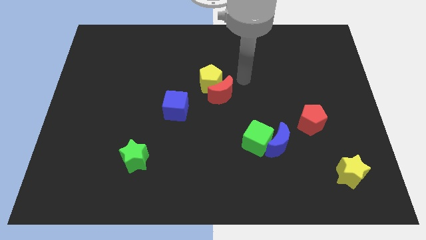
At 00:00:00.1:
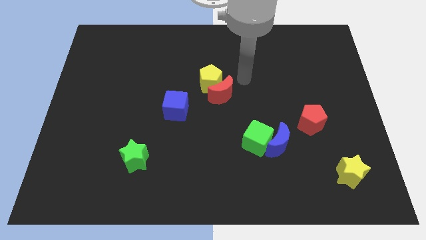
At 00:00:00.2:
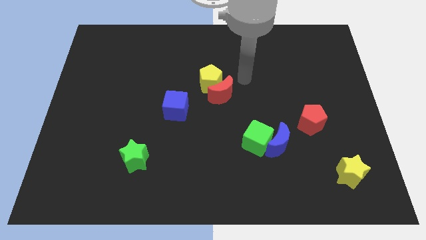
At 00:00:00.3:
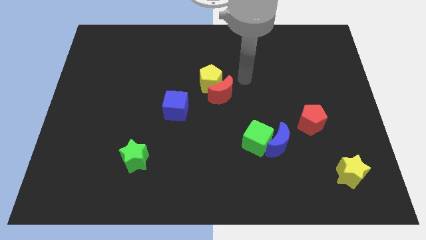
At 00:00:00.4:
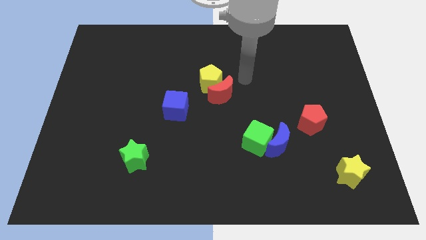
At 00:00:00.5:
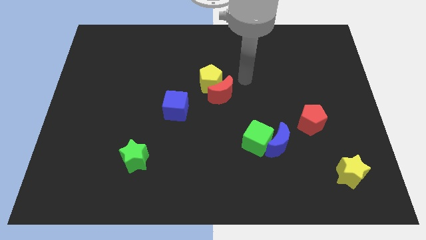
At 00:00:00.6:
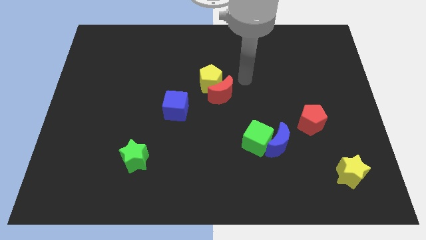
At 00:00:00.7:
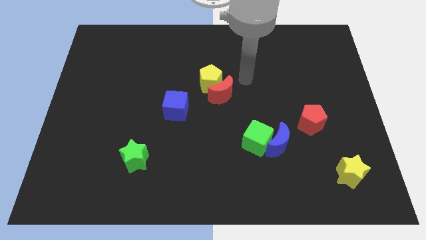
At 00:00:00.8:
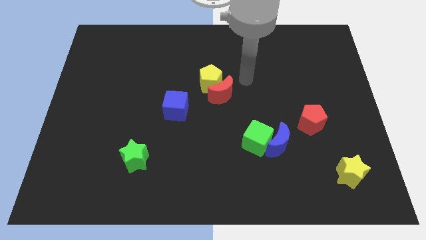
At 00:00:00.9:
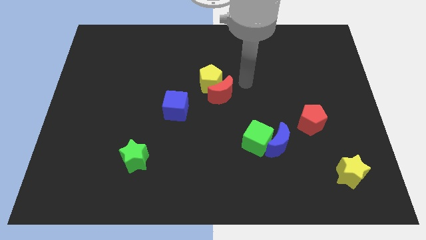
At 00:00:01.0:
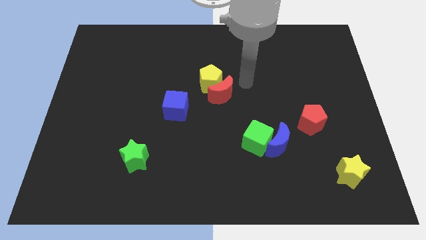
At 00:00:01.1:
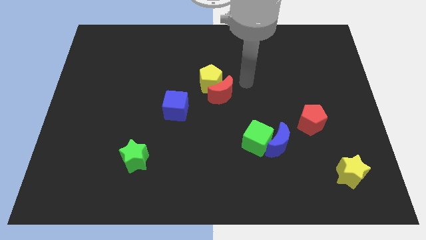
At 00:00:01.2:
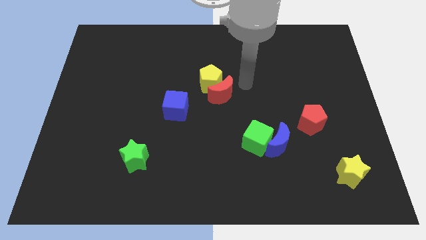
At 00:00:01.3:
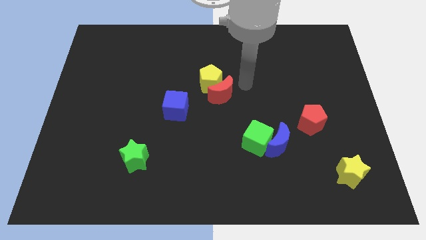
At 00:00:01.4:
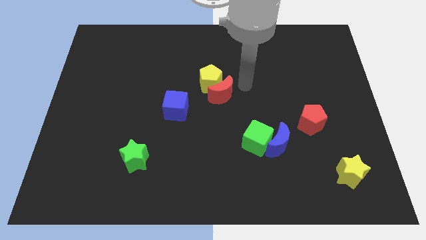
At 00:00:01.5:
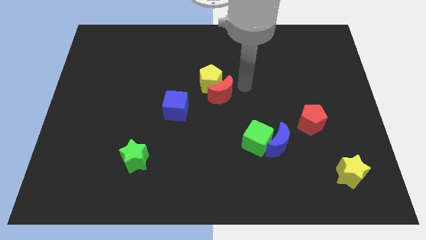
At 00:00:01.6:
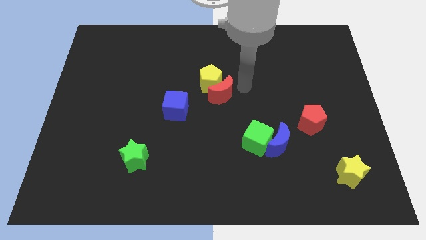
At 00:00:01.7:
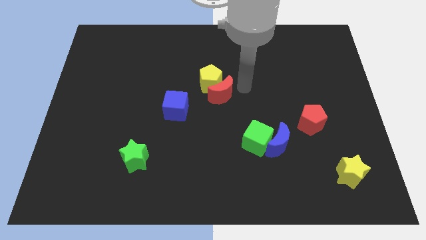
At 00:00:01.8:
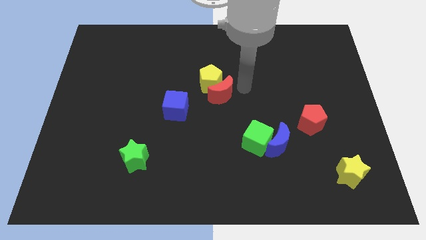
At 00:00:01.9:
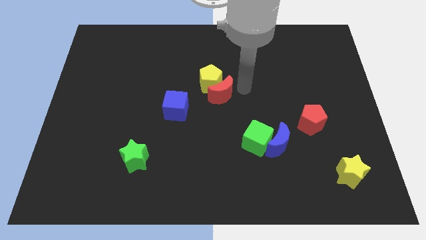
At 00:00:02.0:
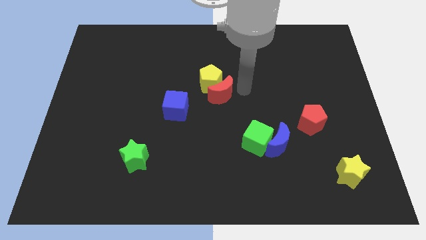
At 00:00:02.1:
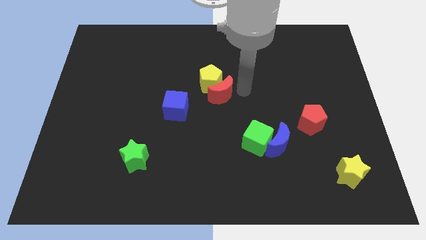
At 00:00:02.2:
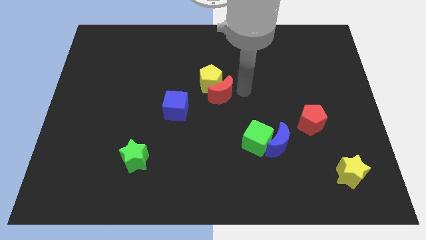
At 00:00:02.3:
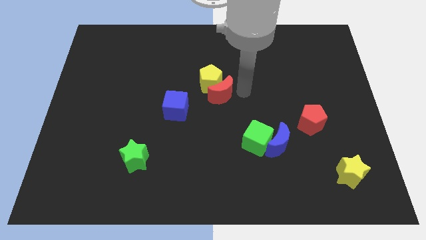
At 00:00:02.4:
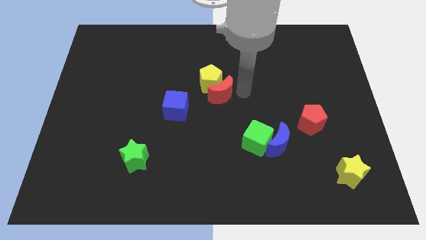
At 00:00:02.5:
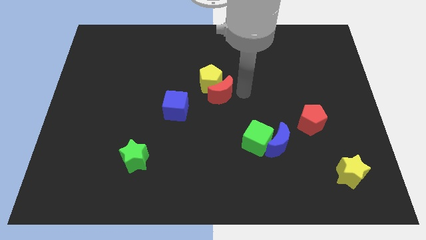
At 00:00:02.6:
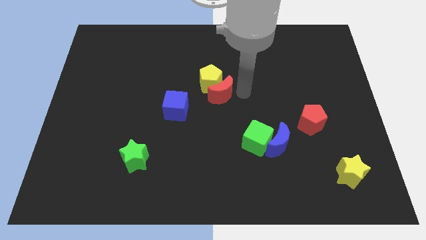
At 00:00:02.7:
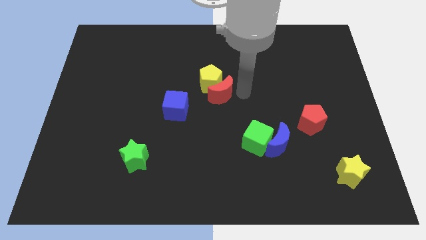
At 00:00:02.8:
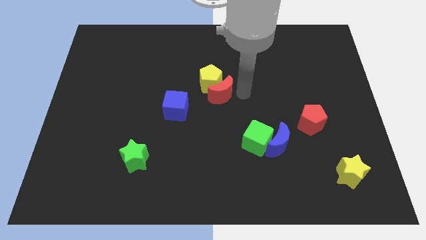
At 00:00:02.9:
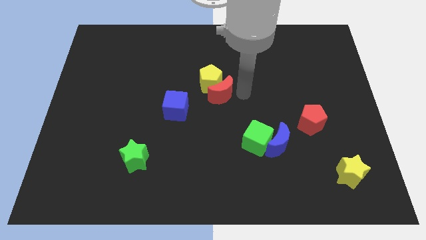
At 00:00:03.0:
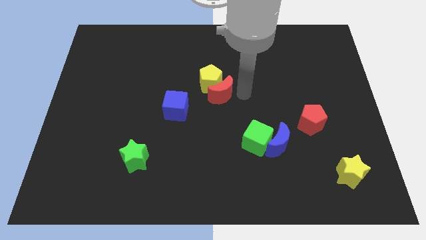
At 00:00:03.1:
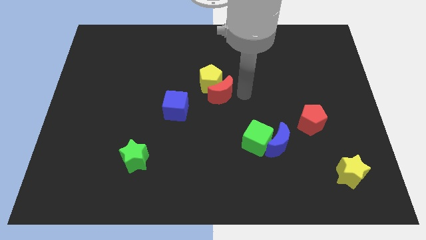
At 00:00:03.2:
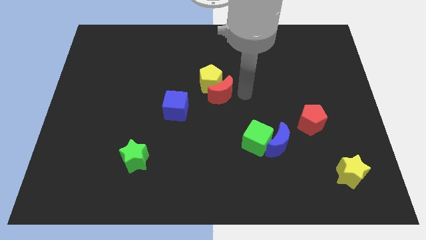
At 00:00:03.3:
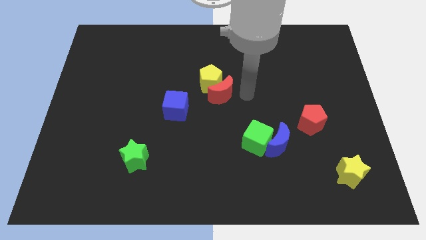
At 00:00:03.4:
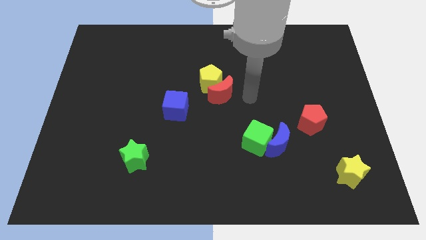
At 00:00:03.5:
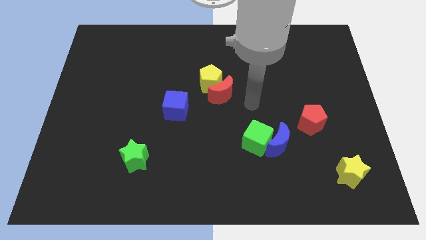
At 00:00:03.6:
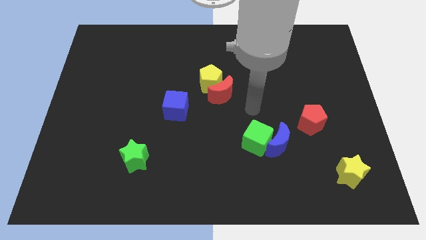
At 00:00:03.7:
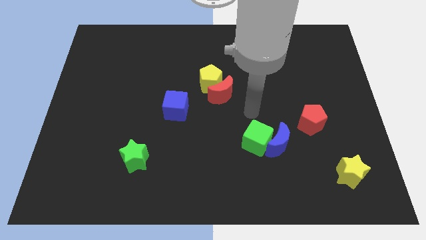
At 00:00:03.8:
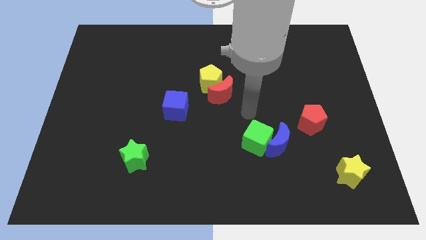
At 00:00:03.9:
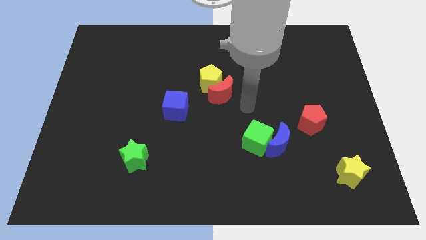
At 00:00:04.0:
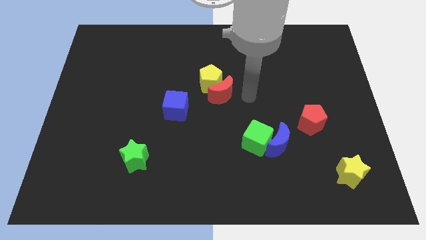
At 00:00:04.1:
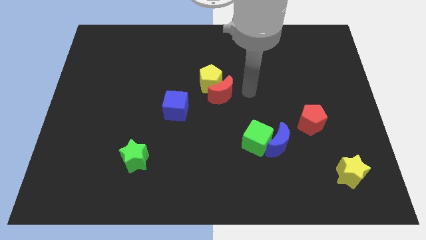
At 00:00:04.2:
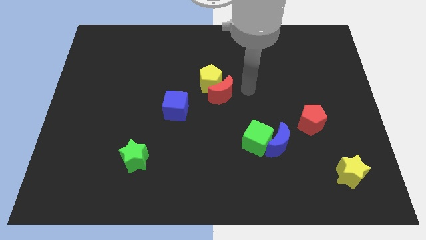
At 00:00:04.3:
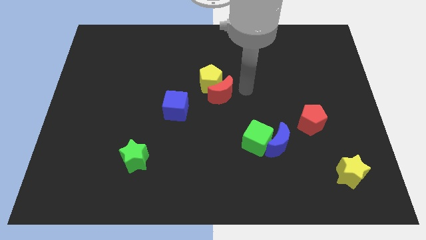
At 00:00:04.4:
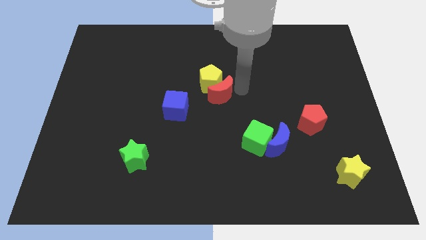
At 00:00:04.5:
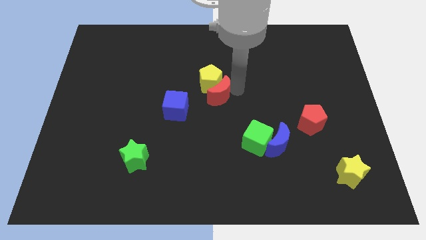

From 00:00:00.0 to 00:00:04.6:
touch the red moon

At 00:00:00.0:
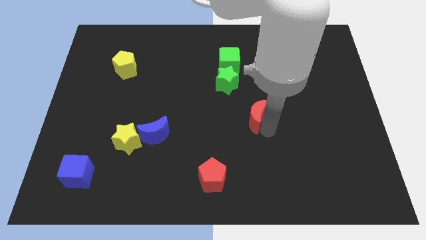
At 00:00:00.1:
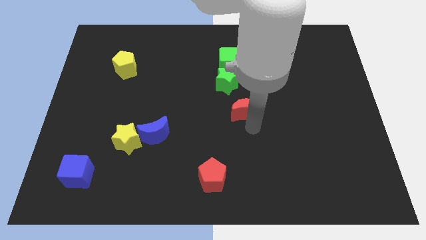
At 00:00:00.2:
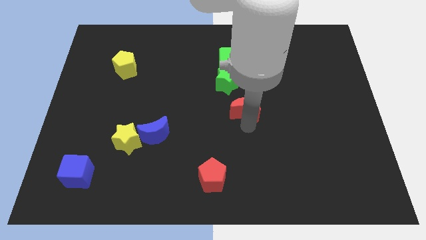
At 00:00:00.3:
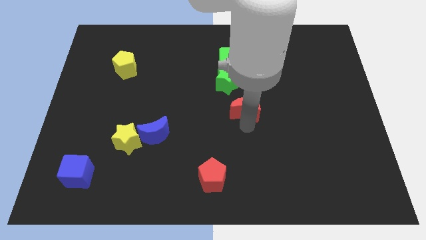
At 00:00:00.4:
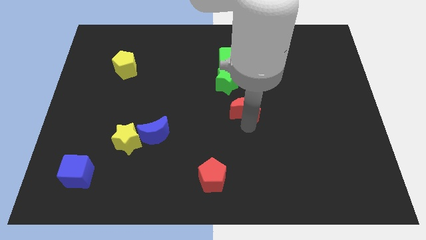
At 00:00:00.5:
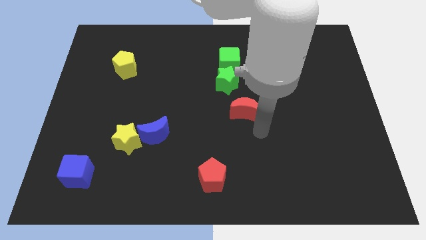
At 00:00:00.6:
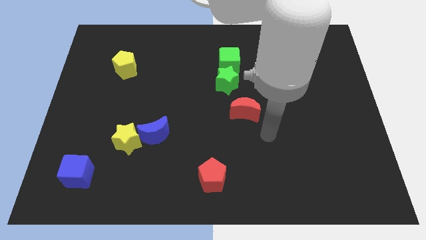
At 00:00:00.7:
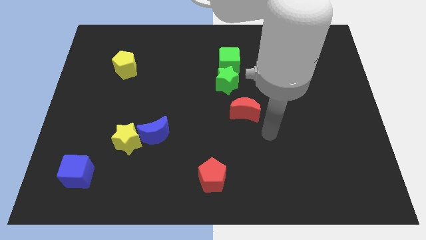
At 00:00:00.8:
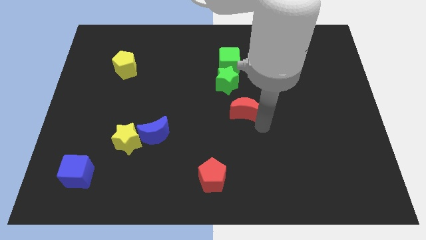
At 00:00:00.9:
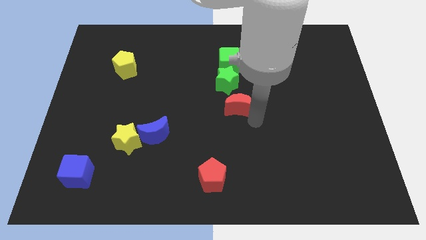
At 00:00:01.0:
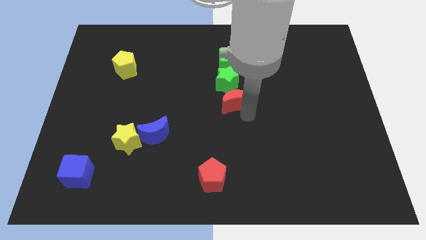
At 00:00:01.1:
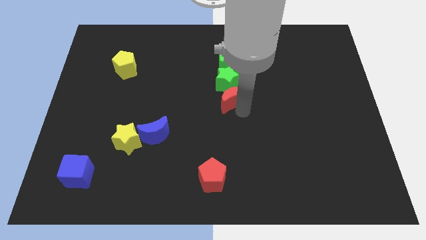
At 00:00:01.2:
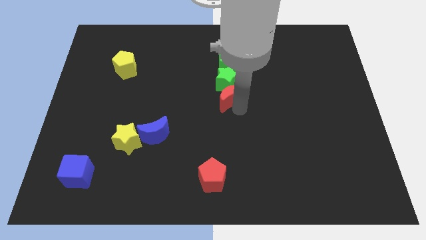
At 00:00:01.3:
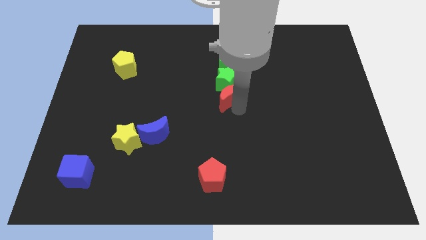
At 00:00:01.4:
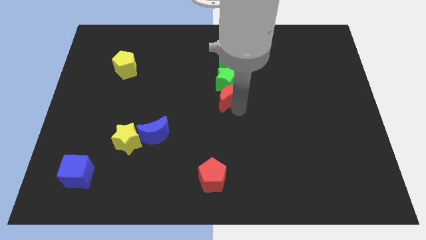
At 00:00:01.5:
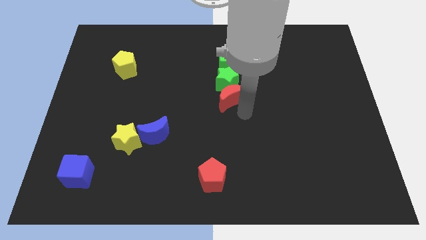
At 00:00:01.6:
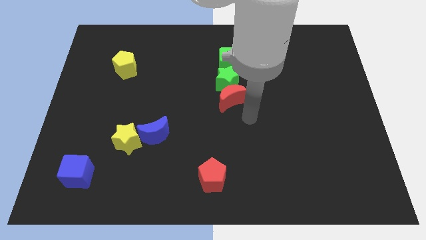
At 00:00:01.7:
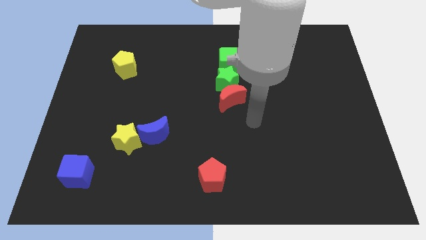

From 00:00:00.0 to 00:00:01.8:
drag the red moon to the bottom right side of the green star

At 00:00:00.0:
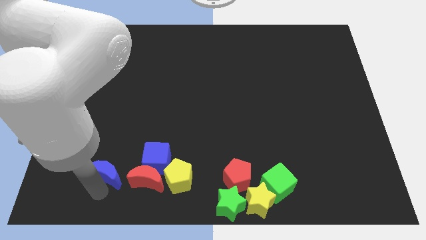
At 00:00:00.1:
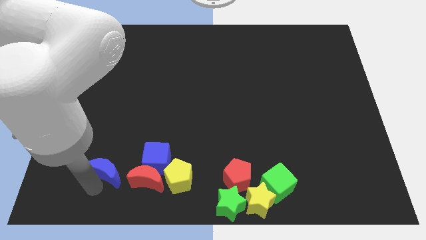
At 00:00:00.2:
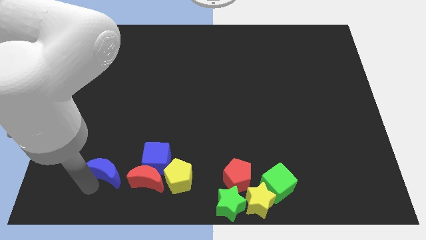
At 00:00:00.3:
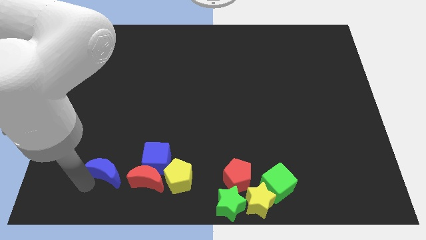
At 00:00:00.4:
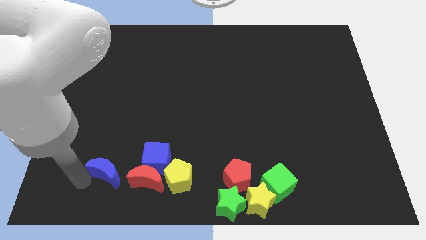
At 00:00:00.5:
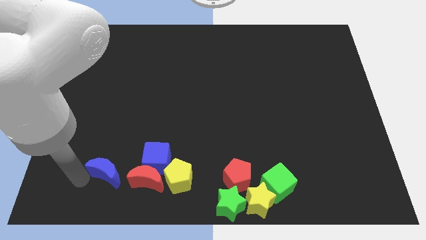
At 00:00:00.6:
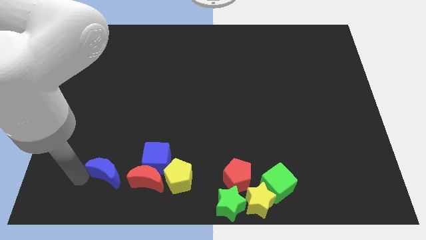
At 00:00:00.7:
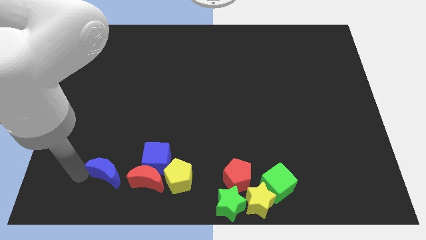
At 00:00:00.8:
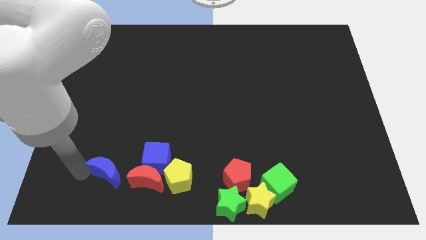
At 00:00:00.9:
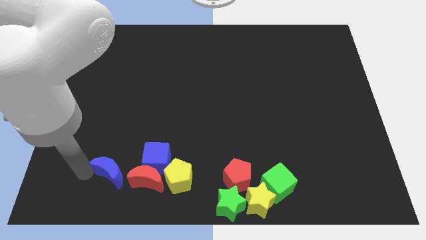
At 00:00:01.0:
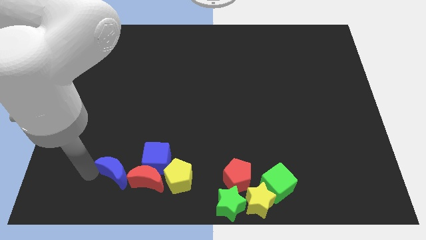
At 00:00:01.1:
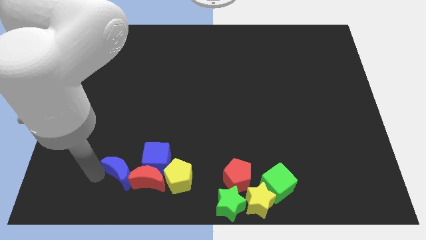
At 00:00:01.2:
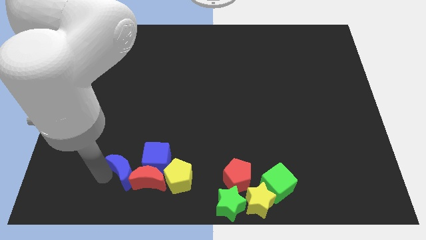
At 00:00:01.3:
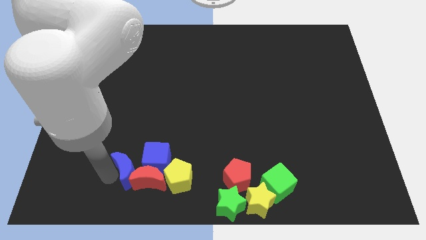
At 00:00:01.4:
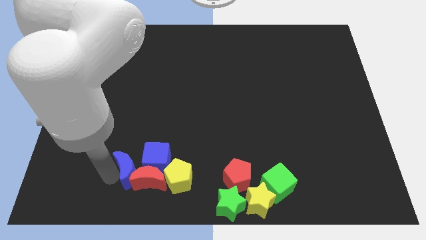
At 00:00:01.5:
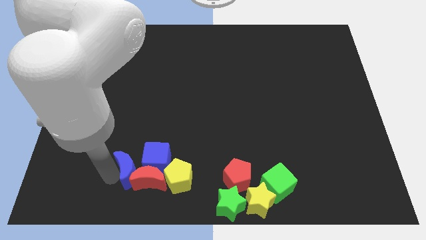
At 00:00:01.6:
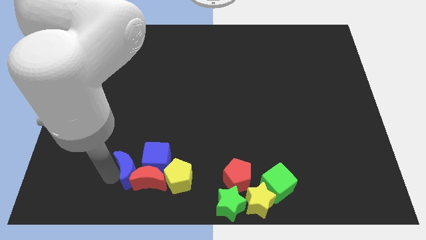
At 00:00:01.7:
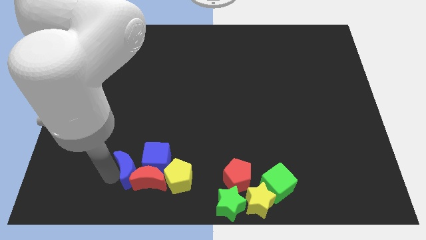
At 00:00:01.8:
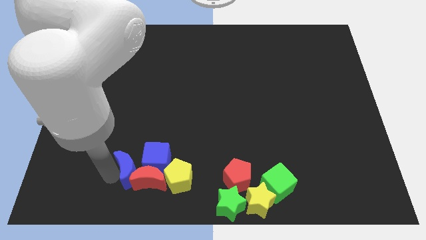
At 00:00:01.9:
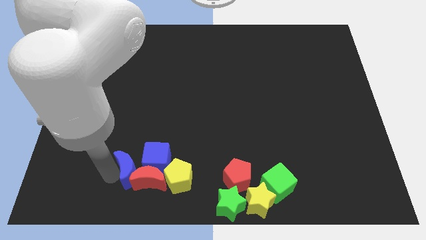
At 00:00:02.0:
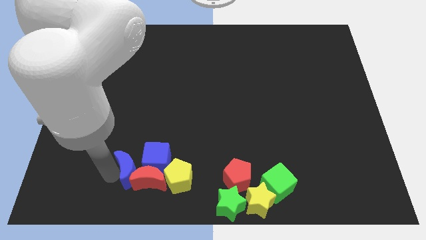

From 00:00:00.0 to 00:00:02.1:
push the blue moon into the red moon

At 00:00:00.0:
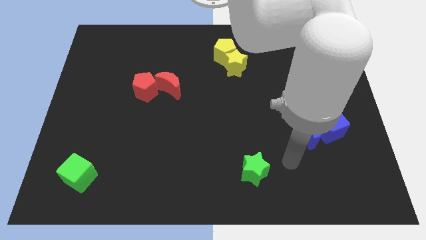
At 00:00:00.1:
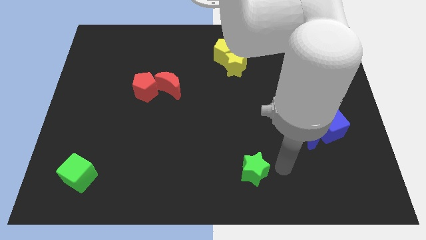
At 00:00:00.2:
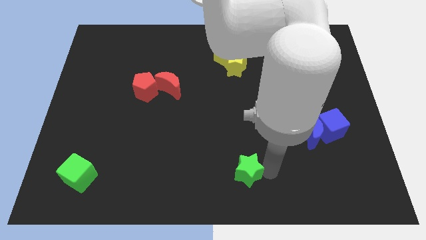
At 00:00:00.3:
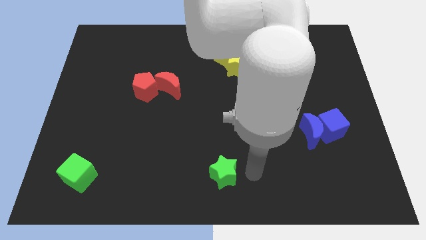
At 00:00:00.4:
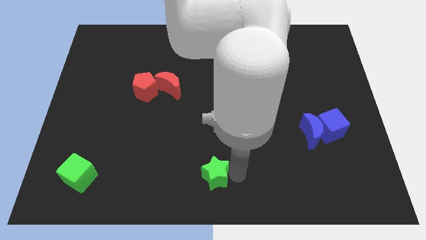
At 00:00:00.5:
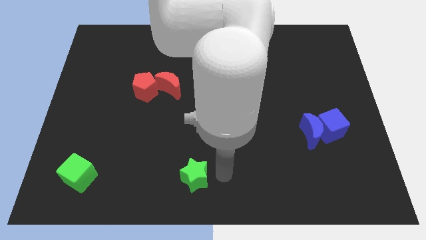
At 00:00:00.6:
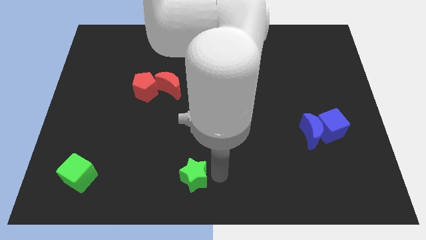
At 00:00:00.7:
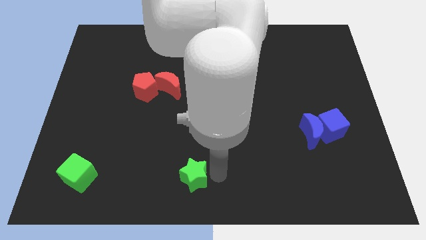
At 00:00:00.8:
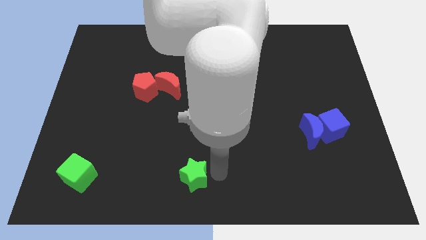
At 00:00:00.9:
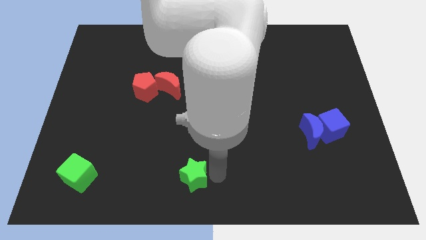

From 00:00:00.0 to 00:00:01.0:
push the green star to the bottom center
